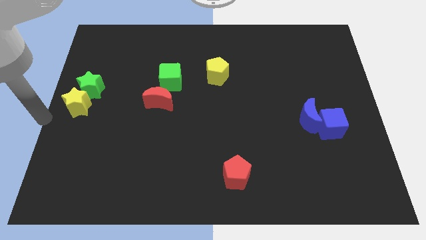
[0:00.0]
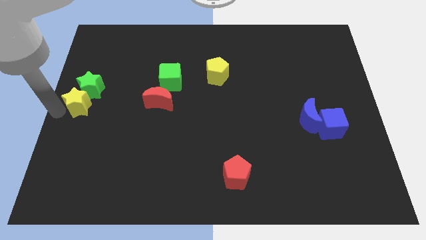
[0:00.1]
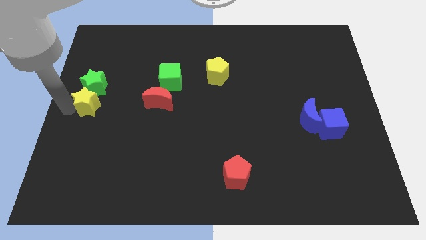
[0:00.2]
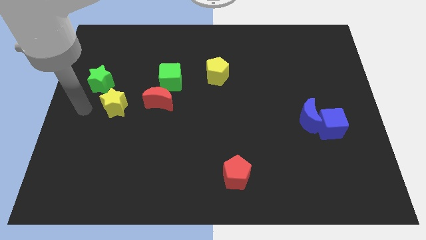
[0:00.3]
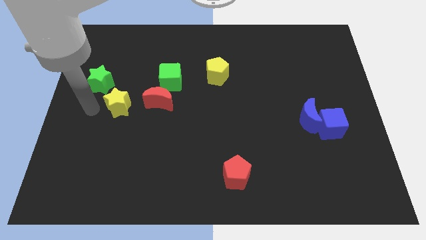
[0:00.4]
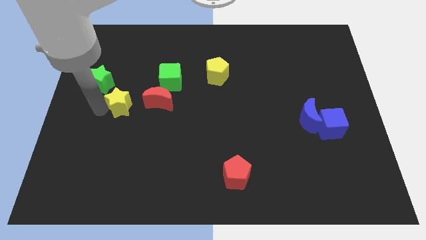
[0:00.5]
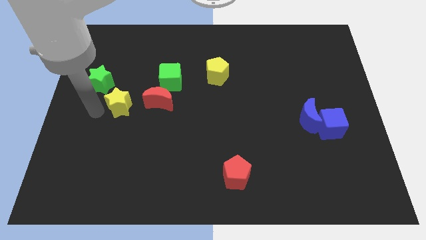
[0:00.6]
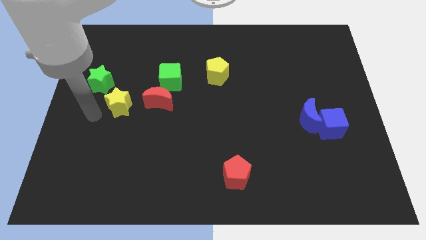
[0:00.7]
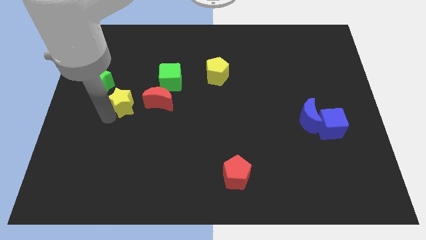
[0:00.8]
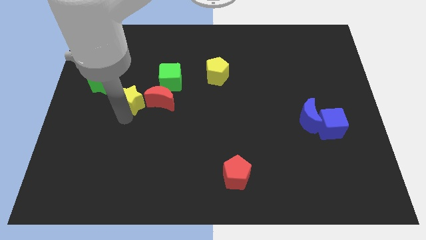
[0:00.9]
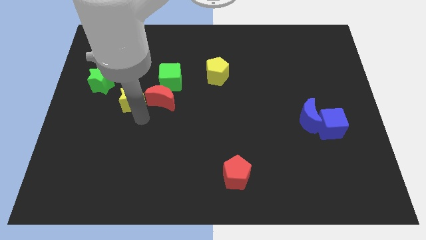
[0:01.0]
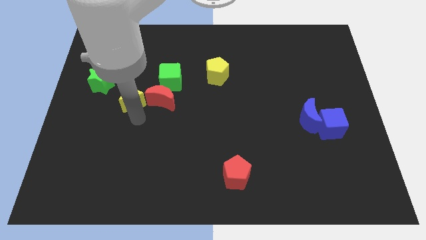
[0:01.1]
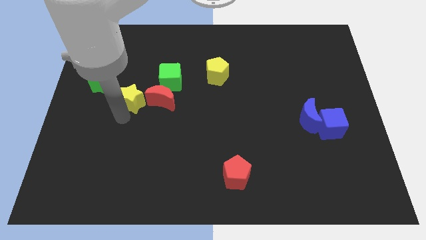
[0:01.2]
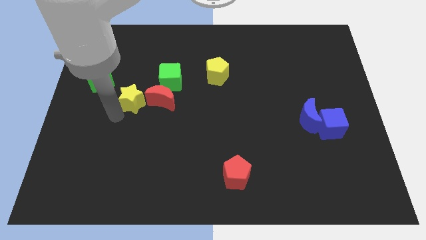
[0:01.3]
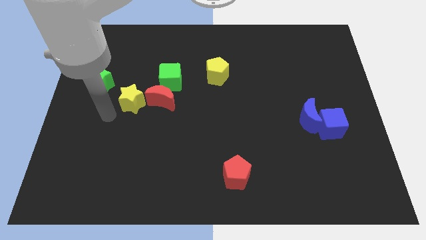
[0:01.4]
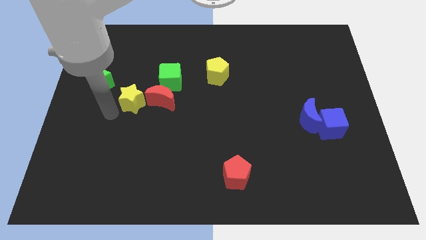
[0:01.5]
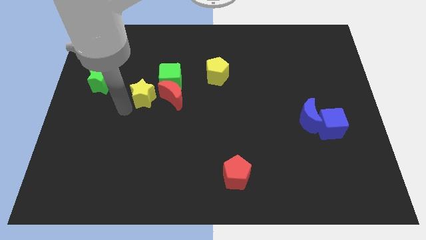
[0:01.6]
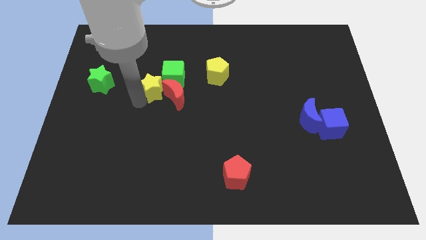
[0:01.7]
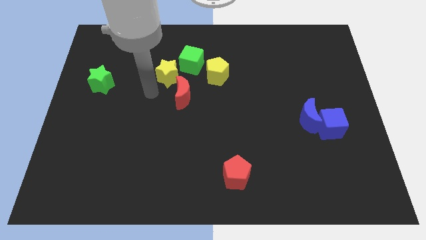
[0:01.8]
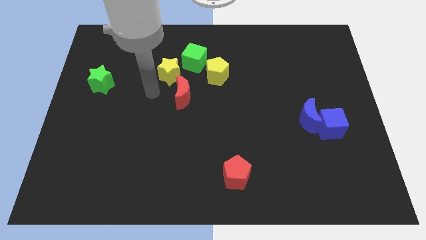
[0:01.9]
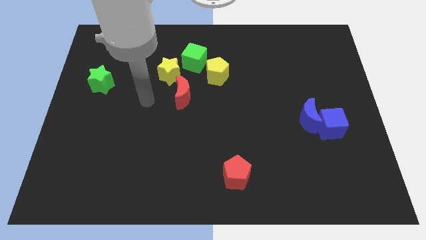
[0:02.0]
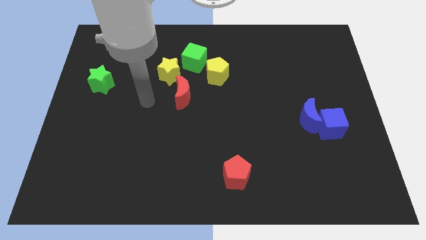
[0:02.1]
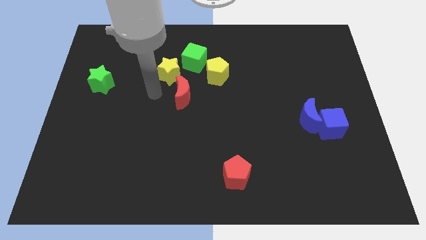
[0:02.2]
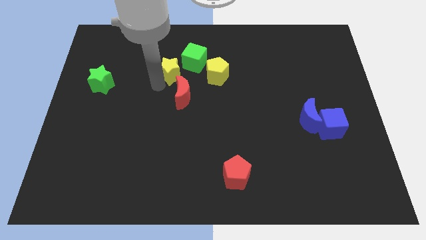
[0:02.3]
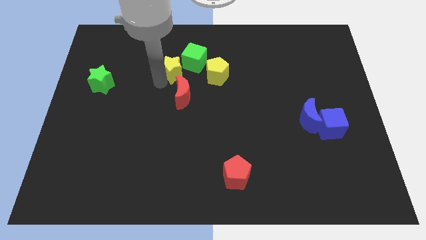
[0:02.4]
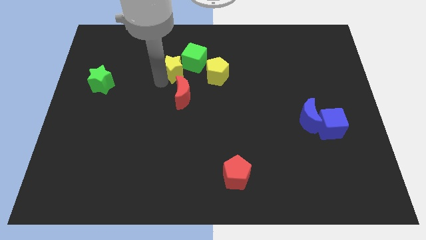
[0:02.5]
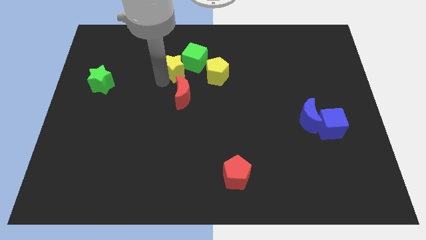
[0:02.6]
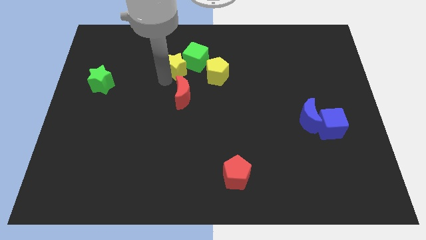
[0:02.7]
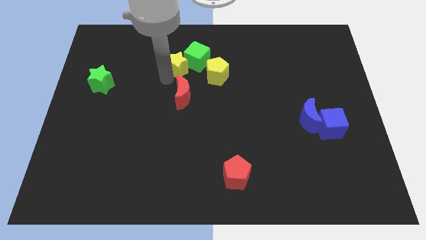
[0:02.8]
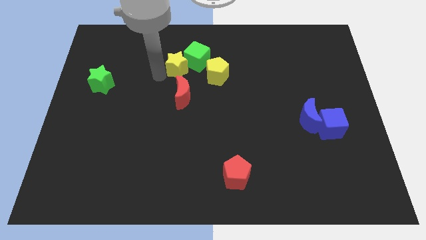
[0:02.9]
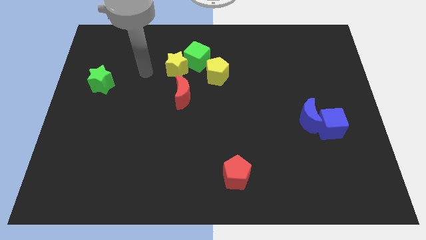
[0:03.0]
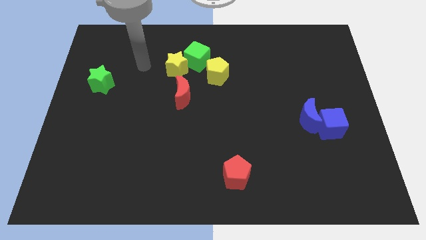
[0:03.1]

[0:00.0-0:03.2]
push the yellow star into the green cube

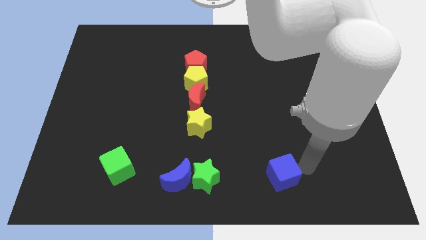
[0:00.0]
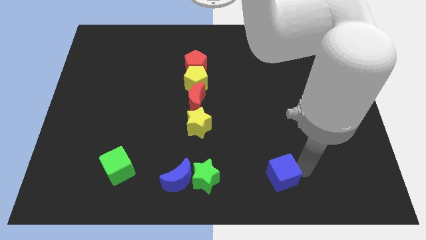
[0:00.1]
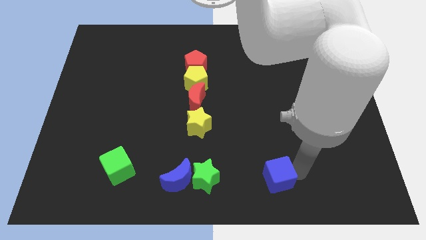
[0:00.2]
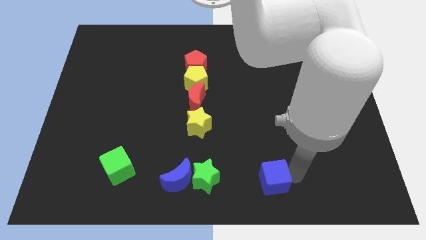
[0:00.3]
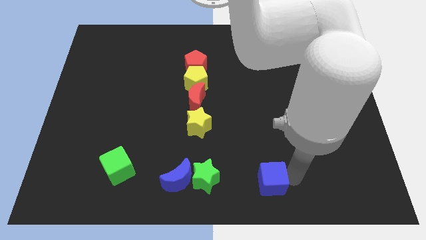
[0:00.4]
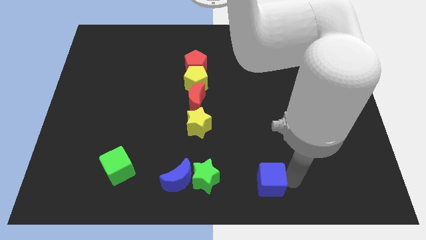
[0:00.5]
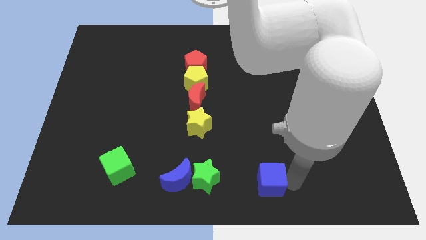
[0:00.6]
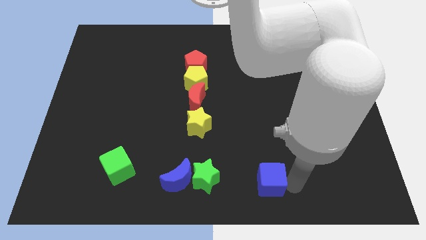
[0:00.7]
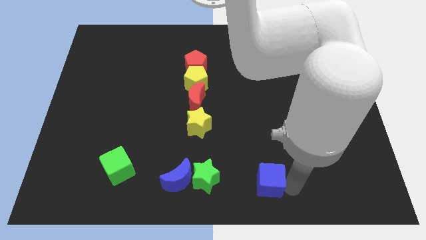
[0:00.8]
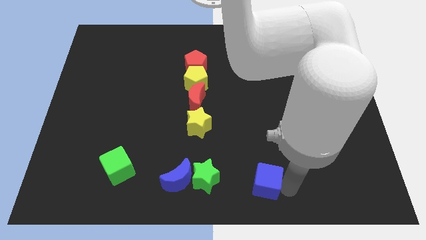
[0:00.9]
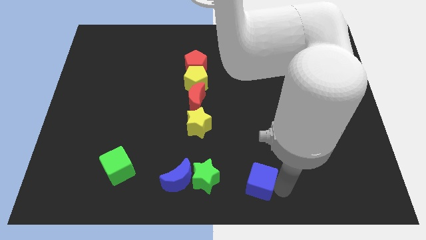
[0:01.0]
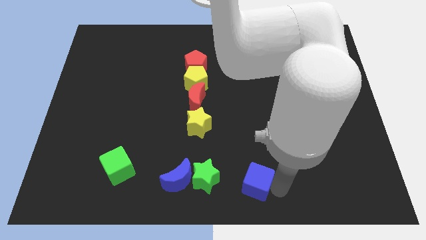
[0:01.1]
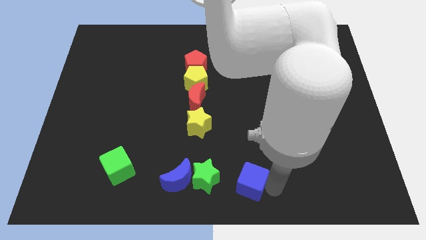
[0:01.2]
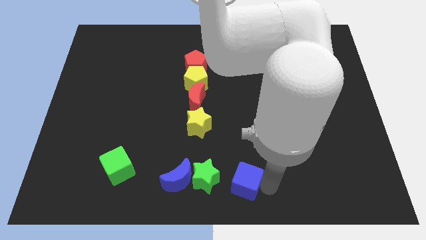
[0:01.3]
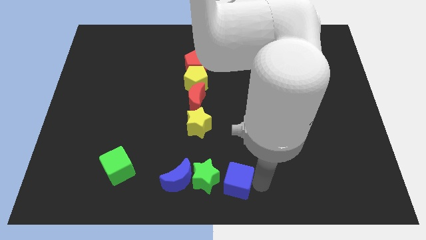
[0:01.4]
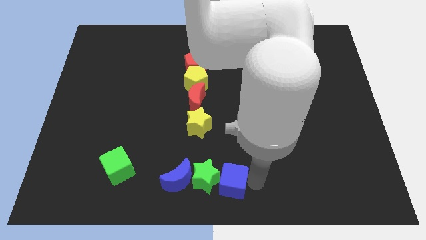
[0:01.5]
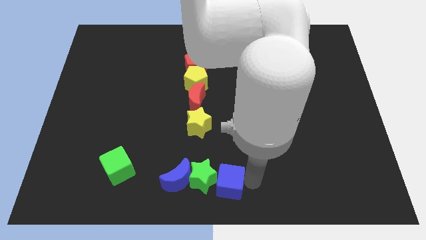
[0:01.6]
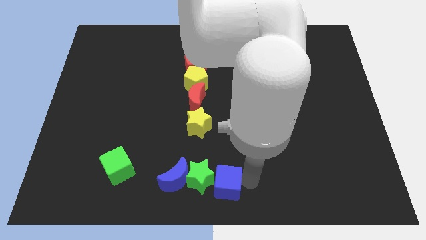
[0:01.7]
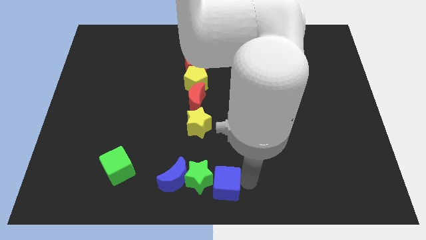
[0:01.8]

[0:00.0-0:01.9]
push the blue cube into the green star

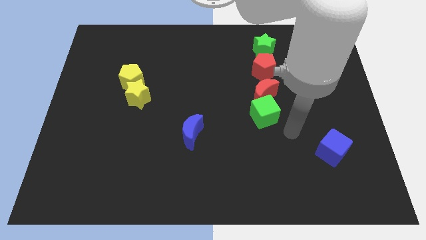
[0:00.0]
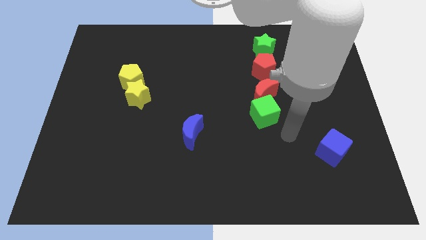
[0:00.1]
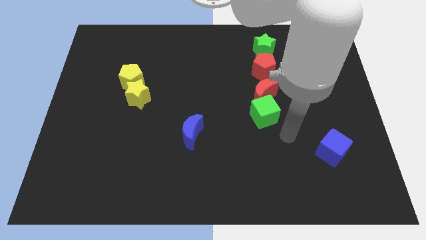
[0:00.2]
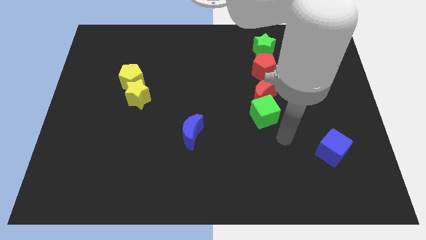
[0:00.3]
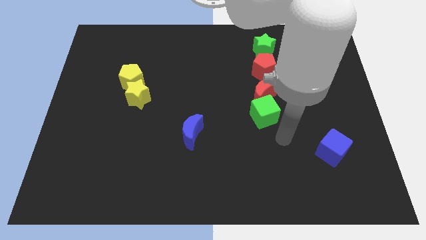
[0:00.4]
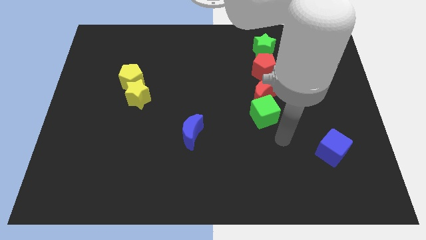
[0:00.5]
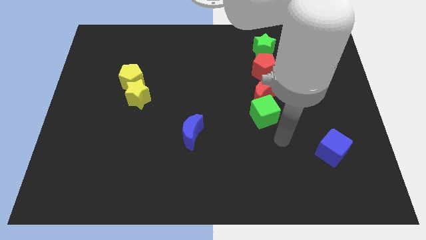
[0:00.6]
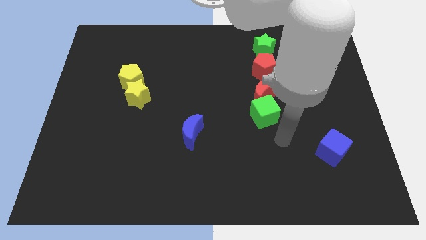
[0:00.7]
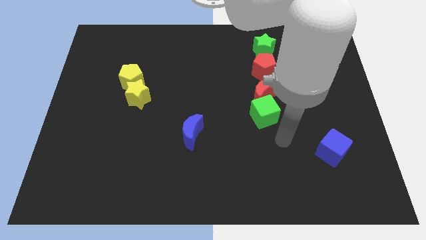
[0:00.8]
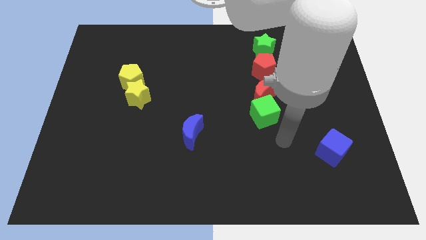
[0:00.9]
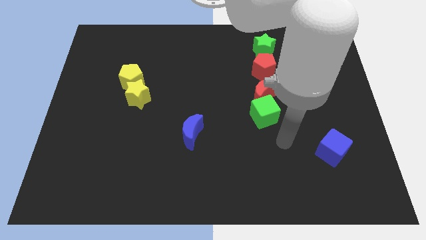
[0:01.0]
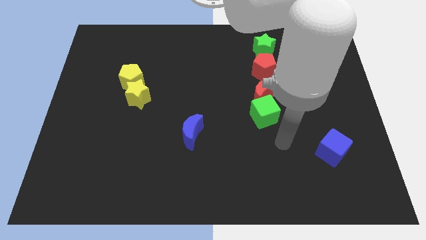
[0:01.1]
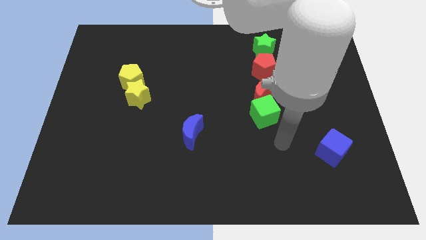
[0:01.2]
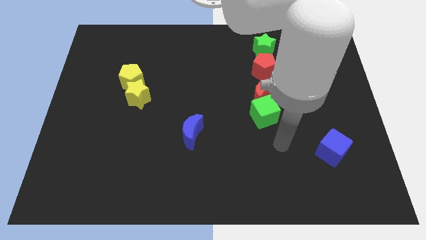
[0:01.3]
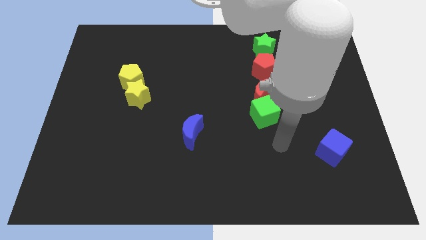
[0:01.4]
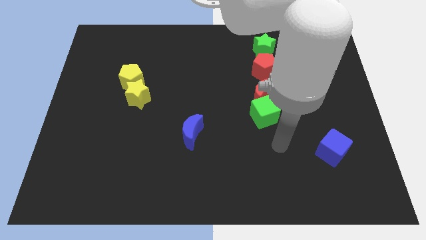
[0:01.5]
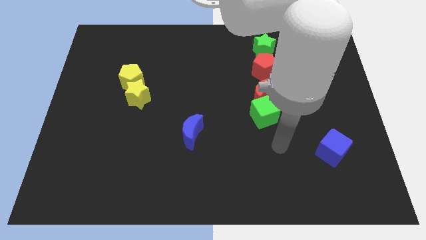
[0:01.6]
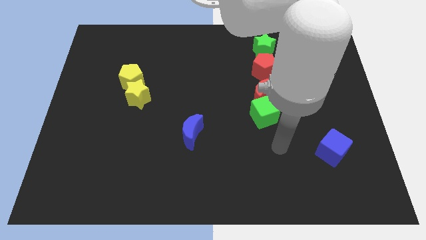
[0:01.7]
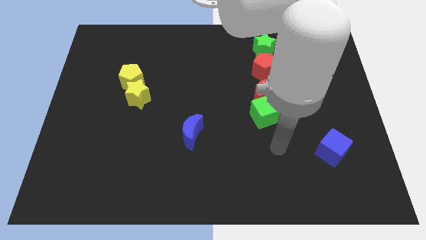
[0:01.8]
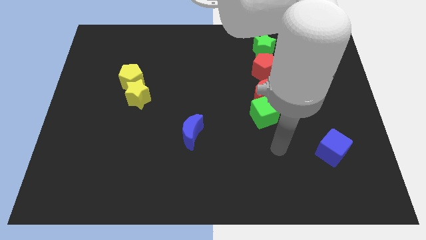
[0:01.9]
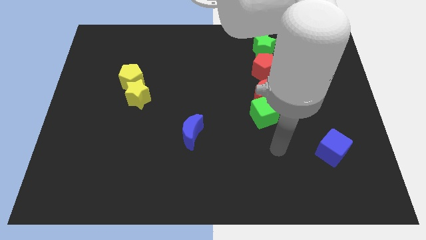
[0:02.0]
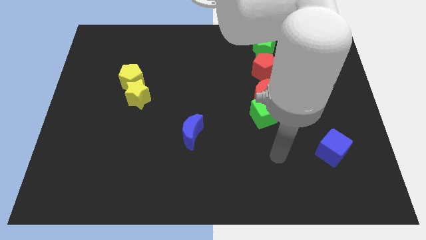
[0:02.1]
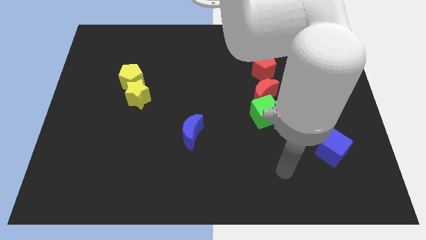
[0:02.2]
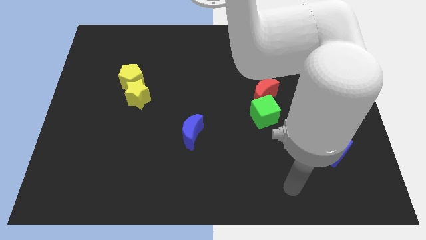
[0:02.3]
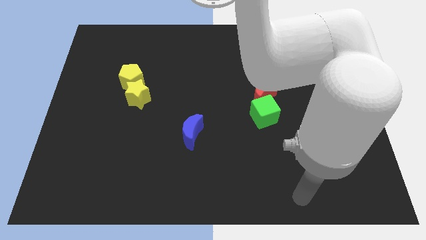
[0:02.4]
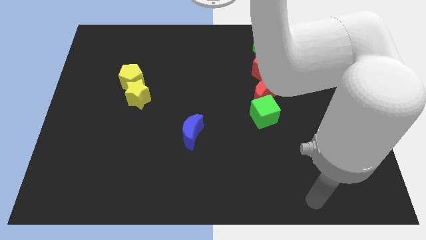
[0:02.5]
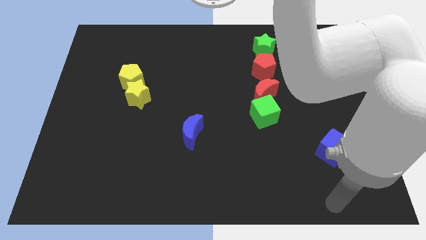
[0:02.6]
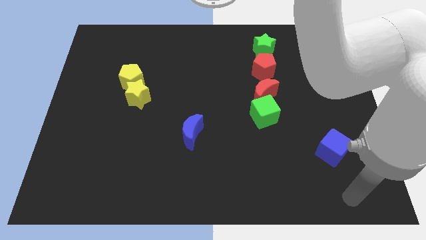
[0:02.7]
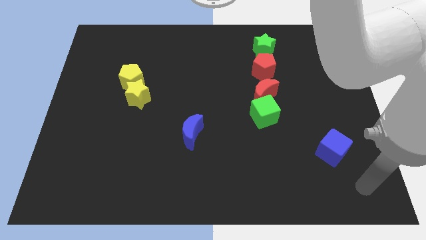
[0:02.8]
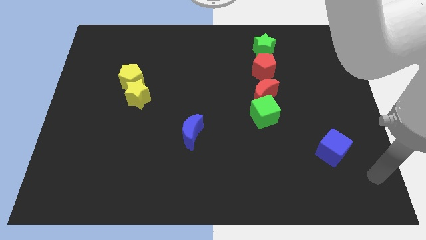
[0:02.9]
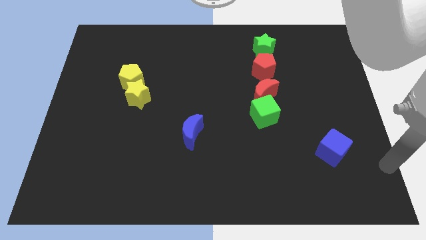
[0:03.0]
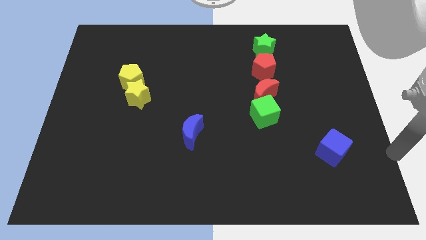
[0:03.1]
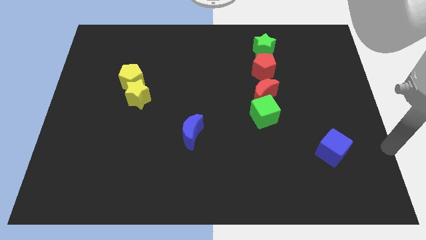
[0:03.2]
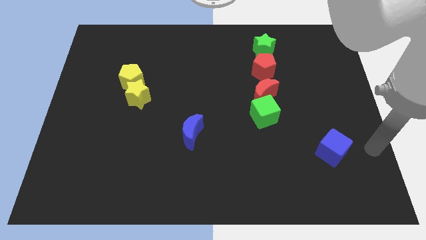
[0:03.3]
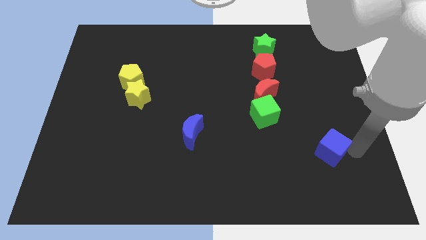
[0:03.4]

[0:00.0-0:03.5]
place your hand to the right of the blue cube

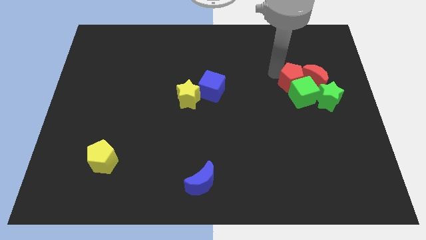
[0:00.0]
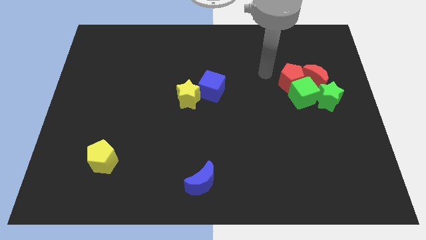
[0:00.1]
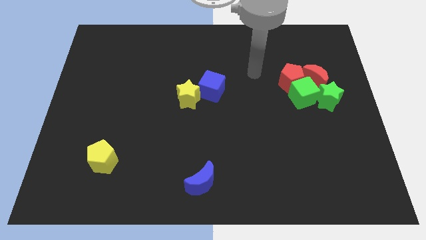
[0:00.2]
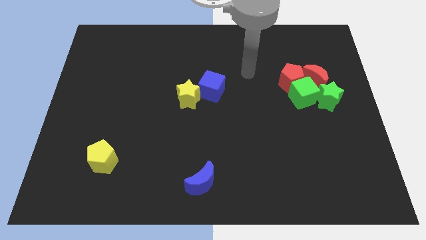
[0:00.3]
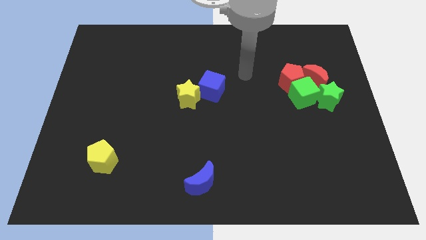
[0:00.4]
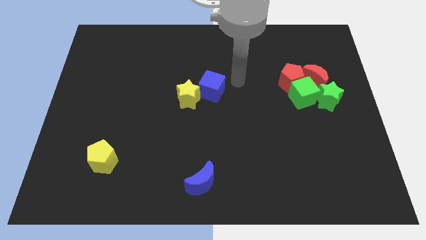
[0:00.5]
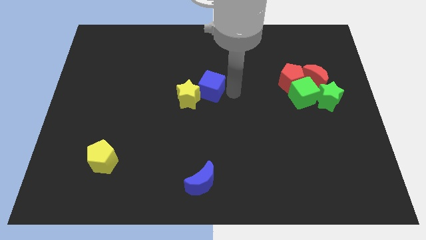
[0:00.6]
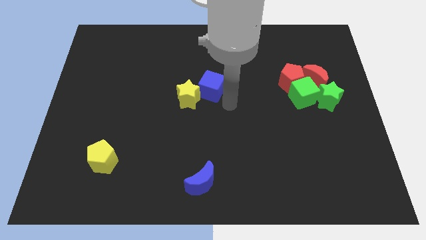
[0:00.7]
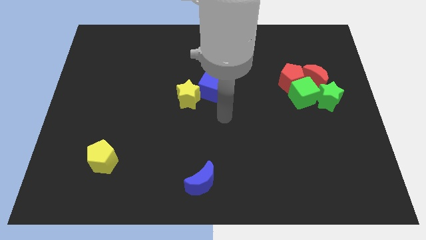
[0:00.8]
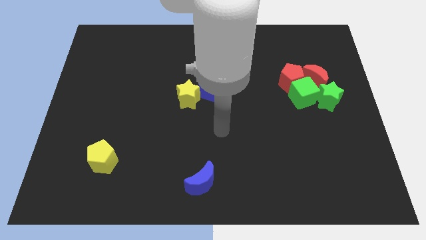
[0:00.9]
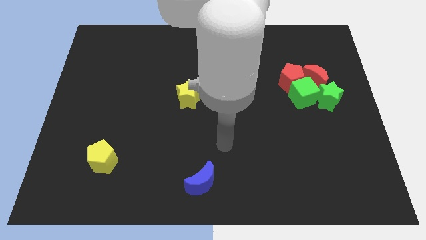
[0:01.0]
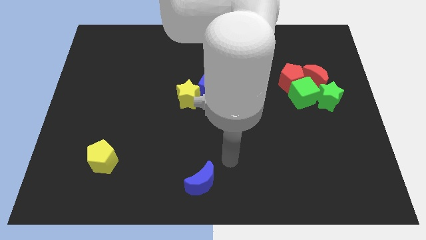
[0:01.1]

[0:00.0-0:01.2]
move your arm towards the top side of the blue moon
